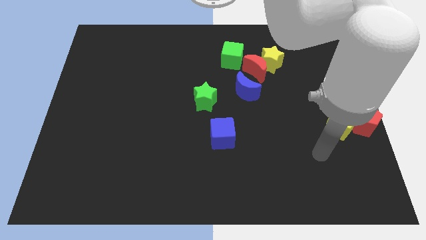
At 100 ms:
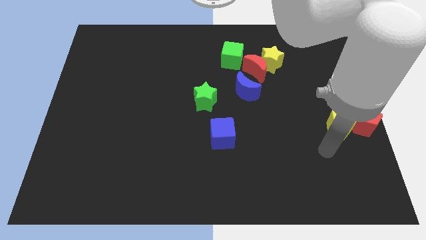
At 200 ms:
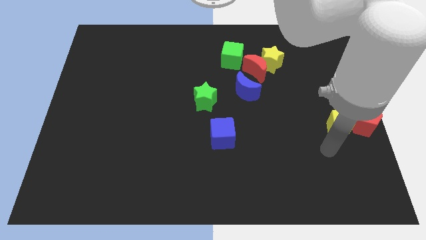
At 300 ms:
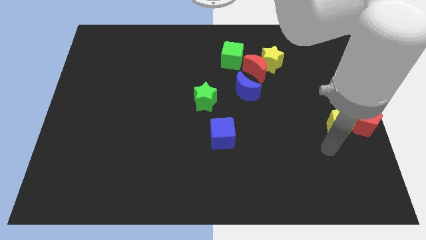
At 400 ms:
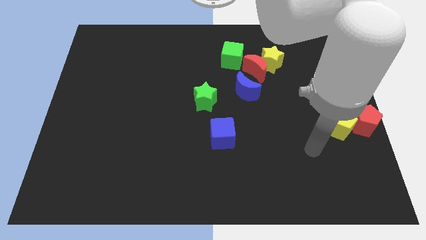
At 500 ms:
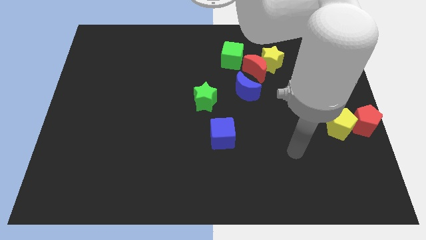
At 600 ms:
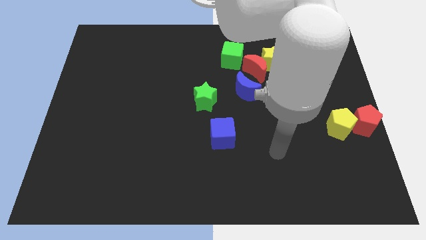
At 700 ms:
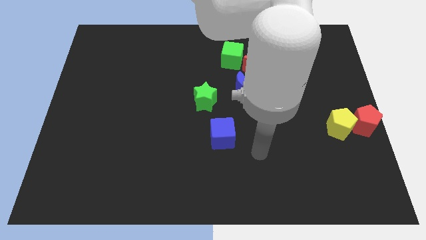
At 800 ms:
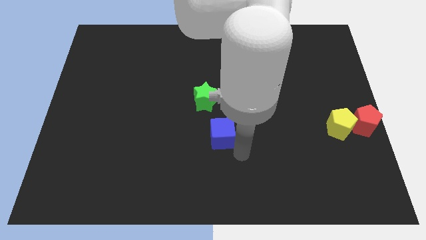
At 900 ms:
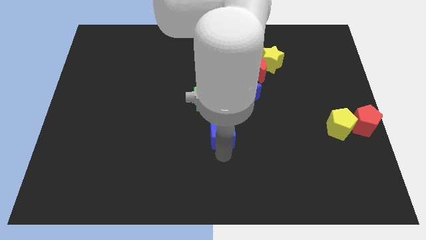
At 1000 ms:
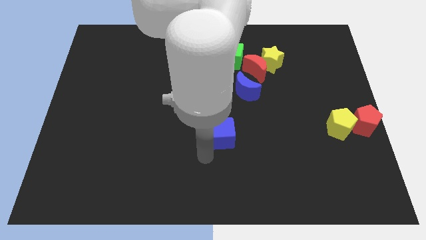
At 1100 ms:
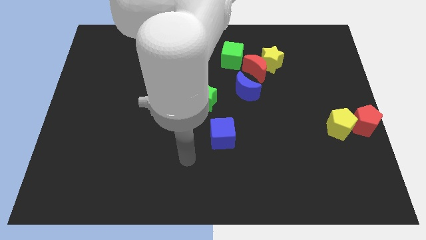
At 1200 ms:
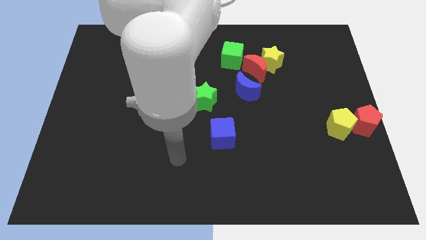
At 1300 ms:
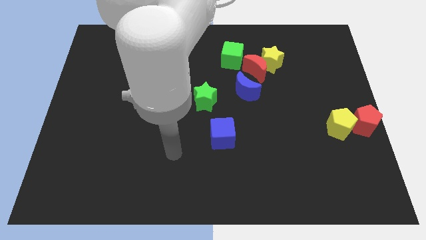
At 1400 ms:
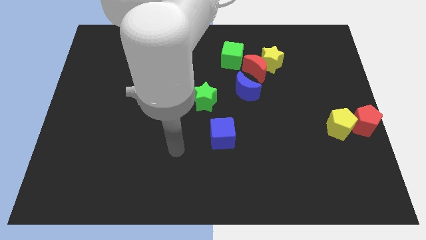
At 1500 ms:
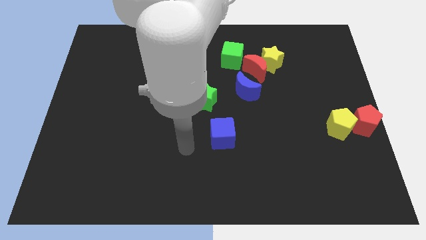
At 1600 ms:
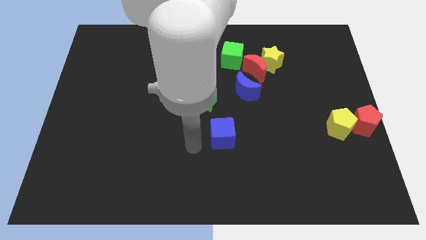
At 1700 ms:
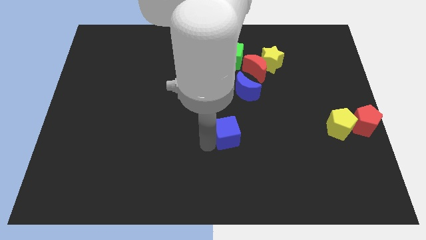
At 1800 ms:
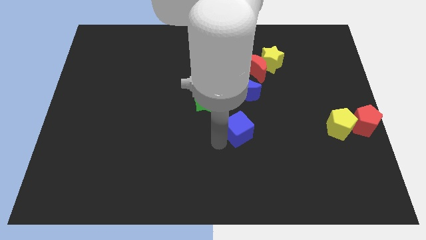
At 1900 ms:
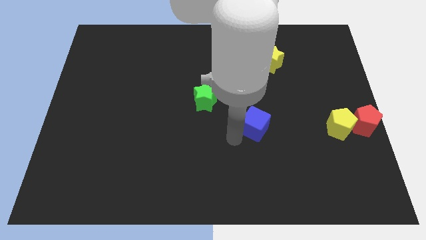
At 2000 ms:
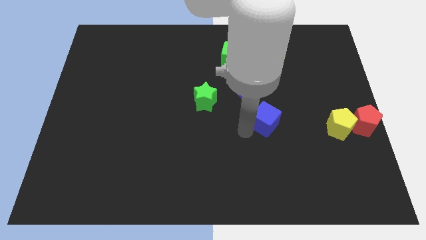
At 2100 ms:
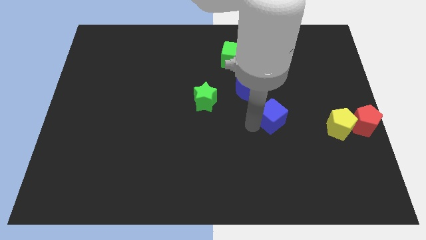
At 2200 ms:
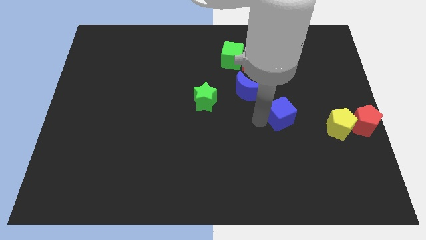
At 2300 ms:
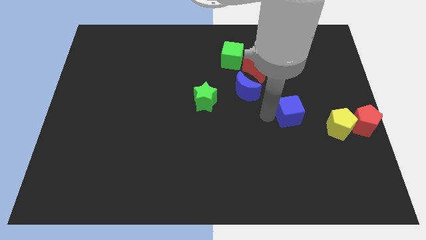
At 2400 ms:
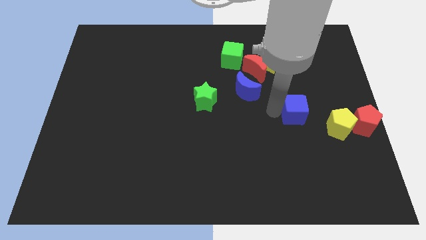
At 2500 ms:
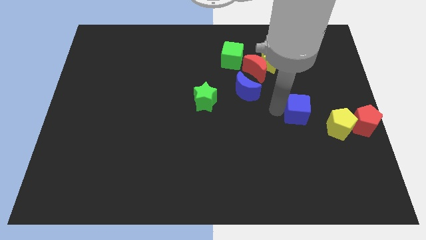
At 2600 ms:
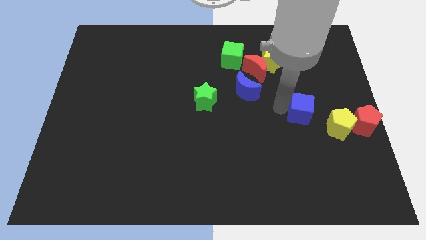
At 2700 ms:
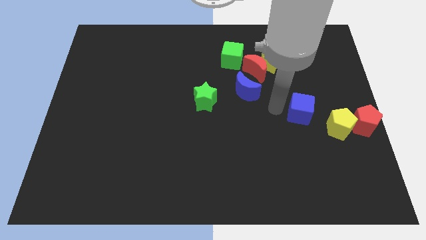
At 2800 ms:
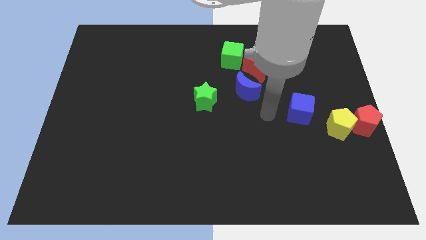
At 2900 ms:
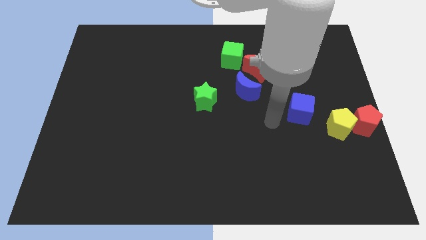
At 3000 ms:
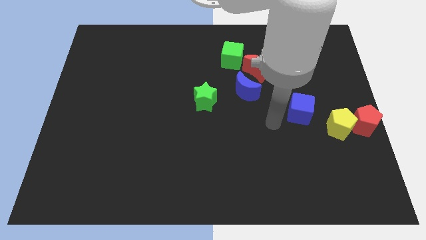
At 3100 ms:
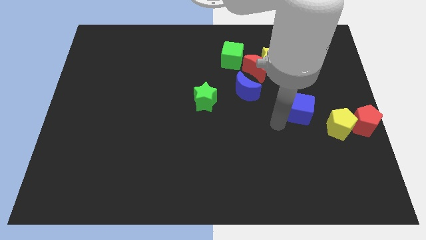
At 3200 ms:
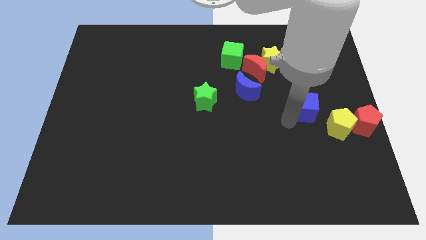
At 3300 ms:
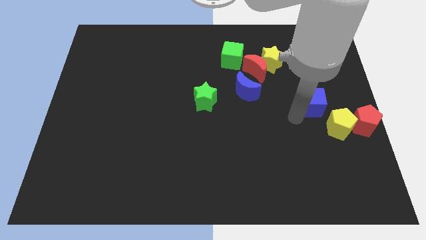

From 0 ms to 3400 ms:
push the blue cube in between the yellow pentagon and the blue crescent

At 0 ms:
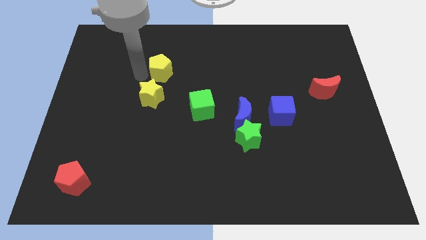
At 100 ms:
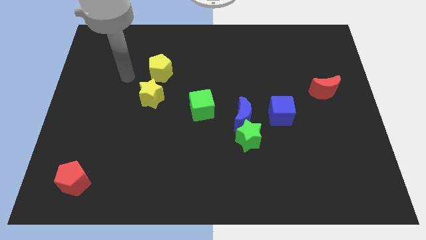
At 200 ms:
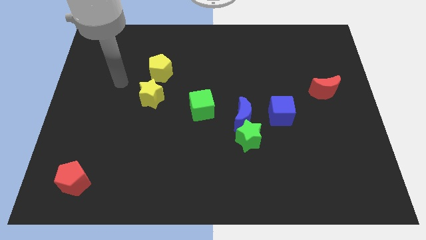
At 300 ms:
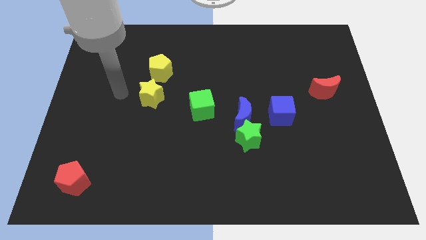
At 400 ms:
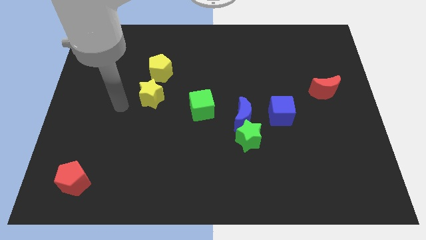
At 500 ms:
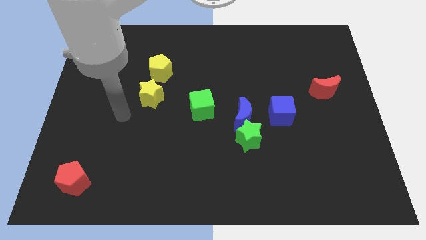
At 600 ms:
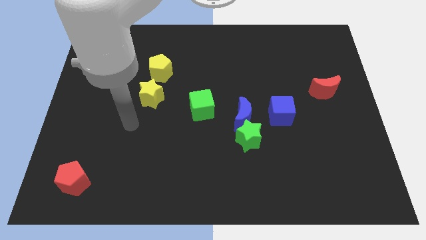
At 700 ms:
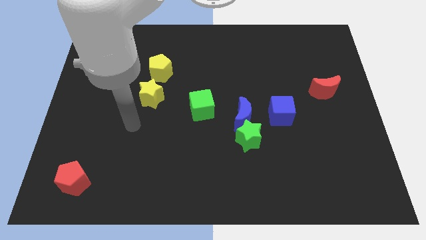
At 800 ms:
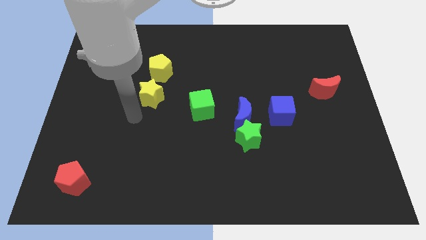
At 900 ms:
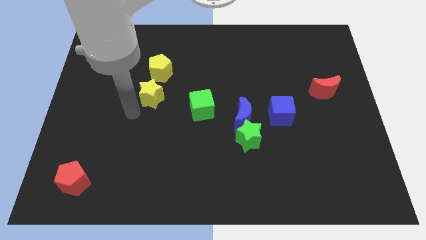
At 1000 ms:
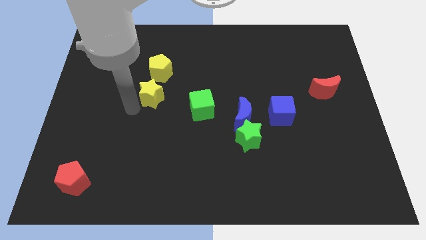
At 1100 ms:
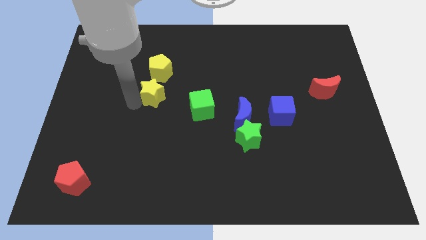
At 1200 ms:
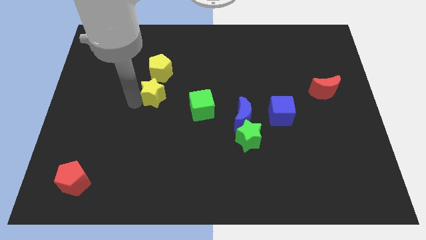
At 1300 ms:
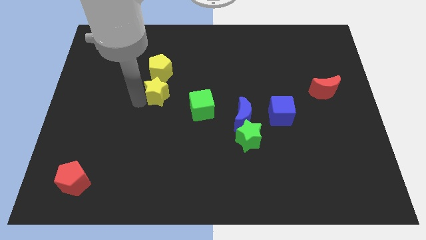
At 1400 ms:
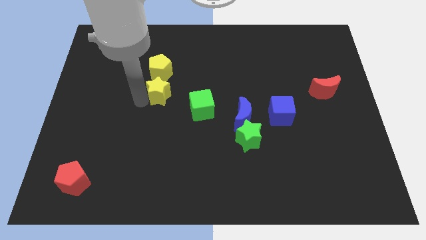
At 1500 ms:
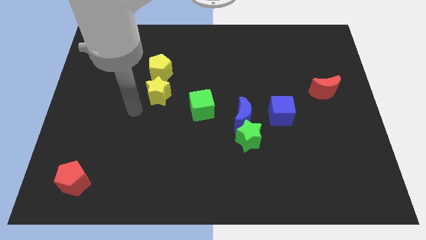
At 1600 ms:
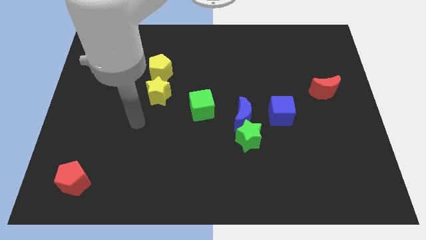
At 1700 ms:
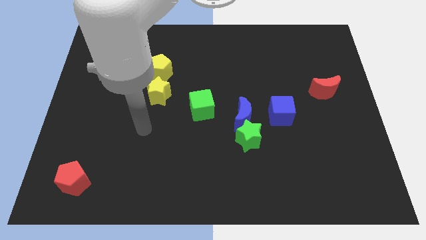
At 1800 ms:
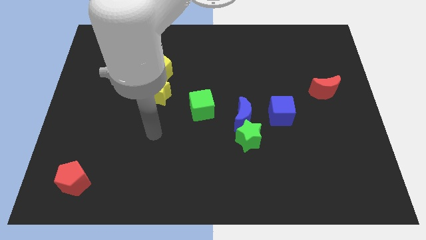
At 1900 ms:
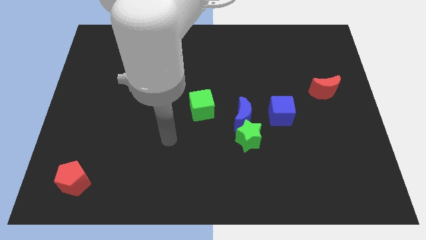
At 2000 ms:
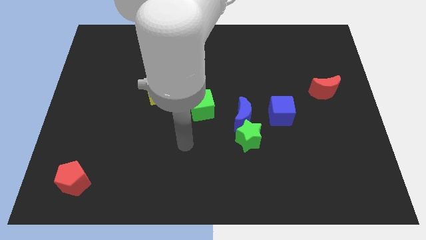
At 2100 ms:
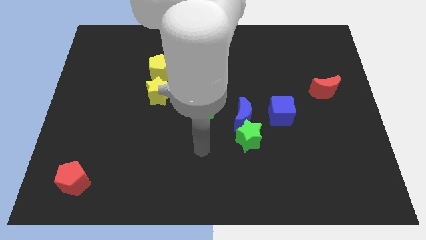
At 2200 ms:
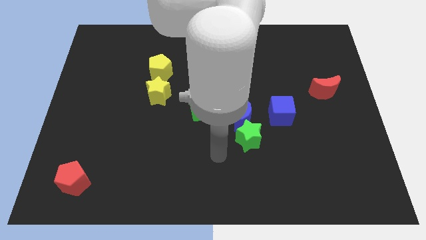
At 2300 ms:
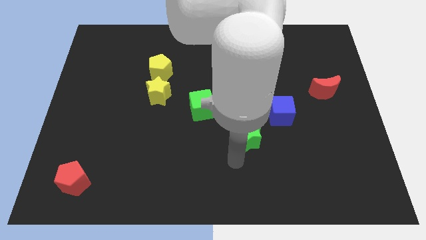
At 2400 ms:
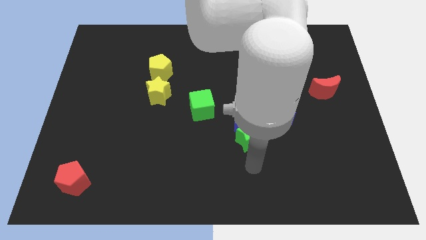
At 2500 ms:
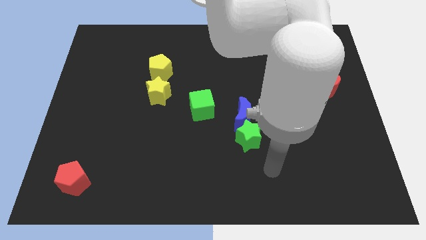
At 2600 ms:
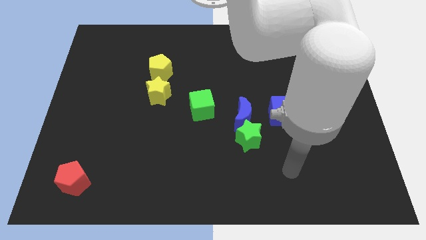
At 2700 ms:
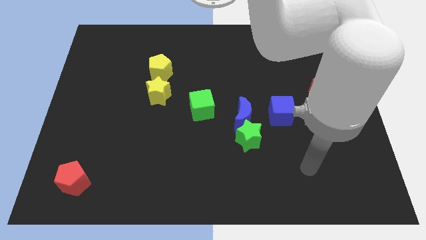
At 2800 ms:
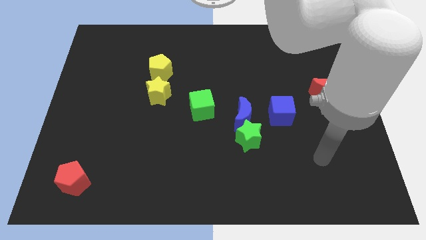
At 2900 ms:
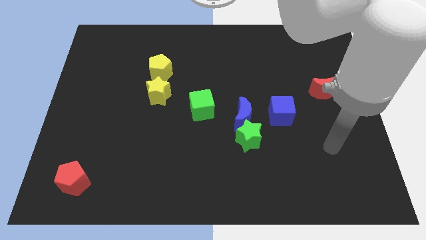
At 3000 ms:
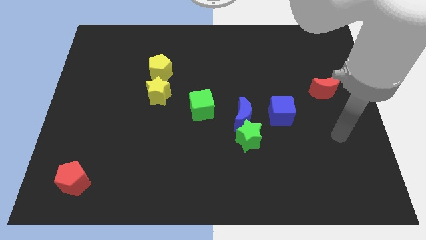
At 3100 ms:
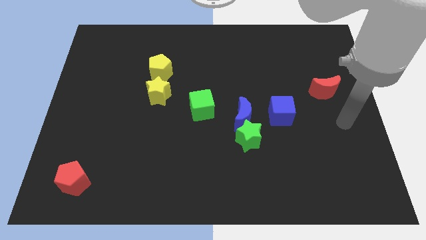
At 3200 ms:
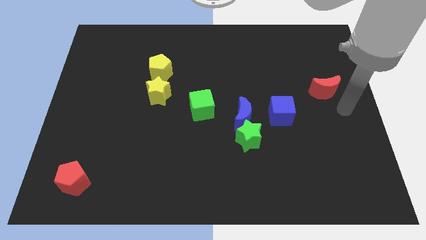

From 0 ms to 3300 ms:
push the yellow star to the bottom of the yellow pentagon

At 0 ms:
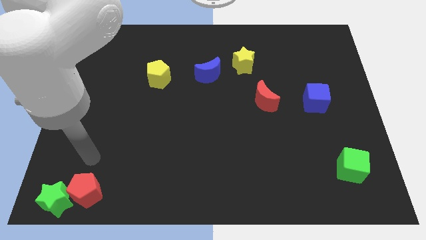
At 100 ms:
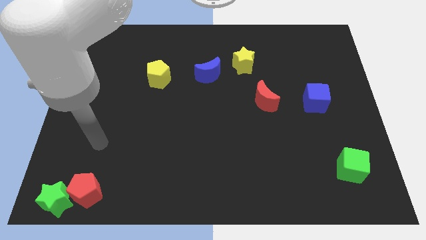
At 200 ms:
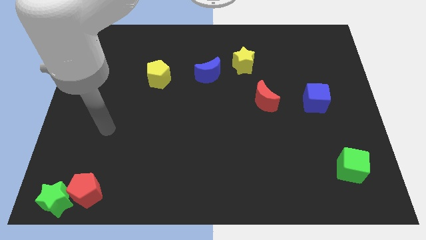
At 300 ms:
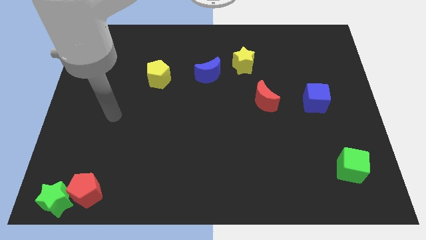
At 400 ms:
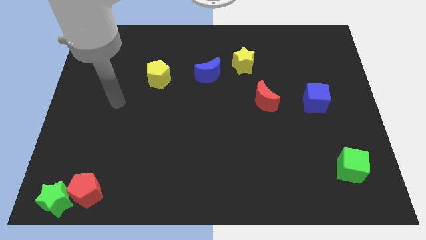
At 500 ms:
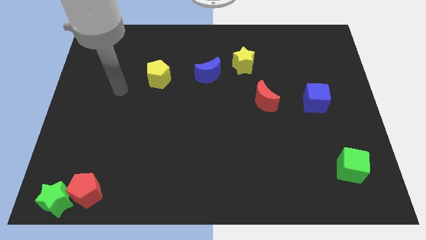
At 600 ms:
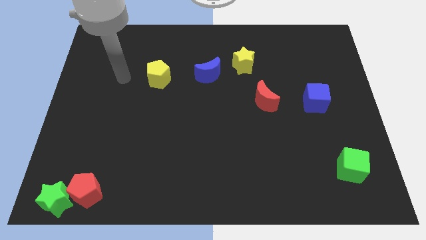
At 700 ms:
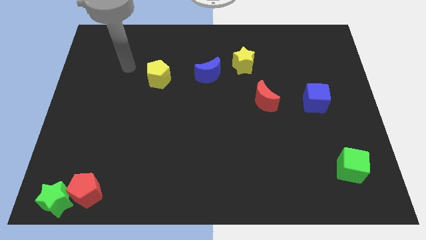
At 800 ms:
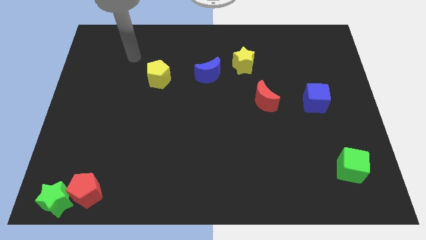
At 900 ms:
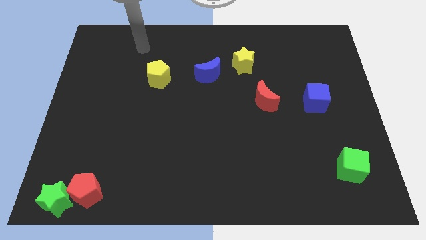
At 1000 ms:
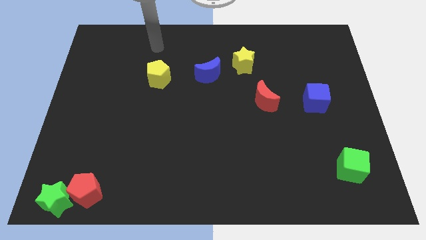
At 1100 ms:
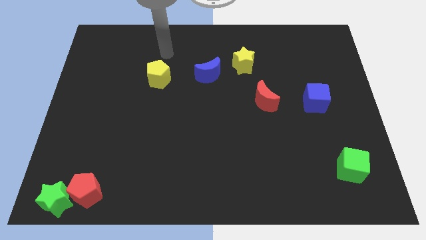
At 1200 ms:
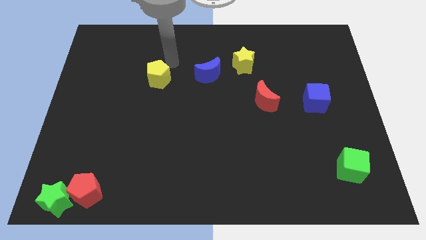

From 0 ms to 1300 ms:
place the arm diagonal to the yellow pentagon

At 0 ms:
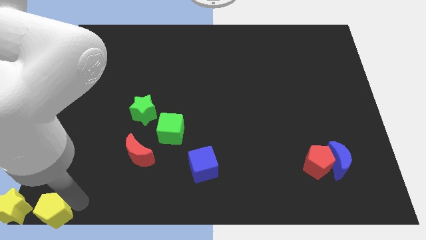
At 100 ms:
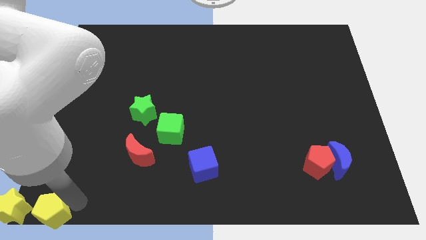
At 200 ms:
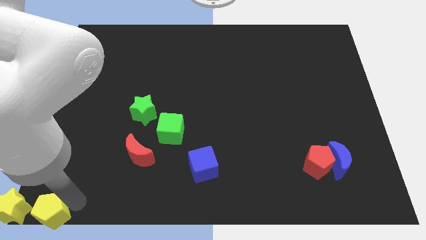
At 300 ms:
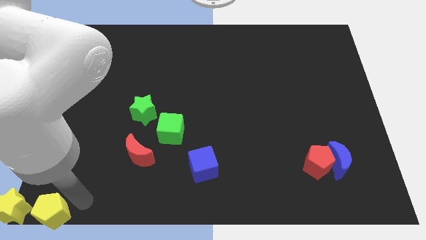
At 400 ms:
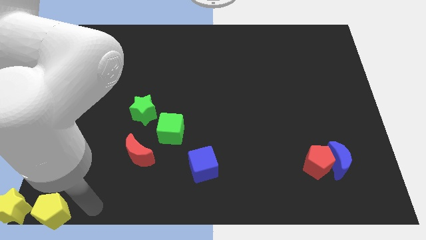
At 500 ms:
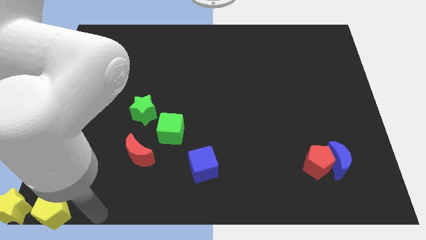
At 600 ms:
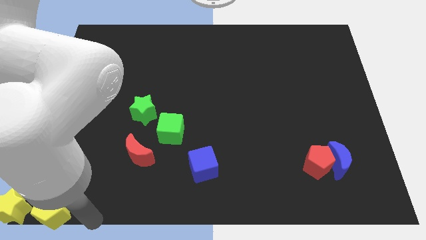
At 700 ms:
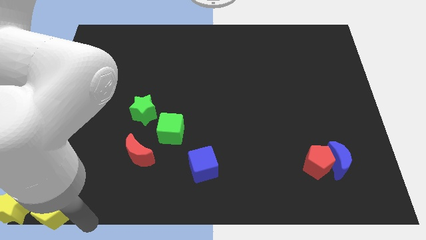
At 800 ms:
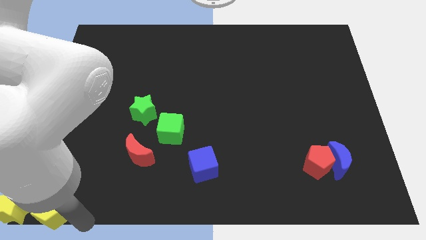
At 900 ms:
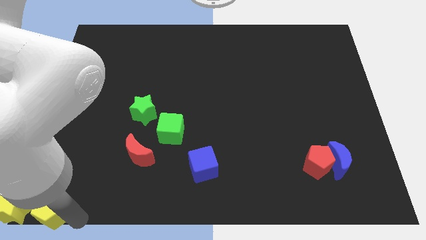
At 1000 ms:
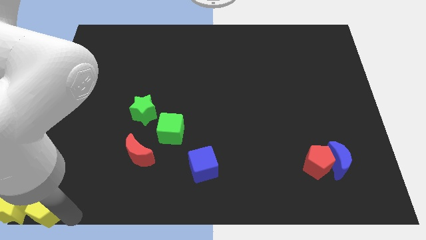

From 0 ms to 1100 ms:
push yellow pentagon slightly towards yellow star
